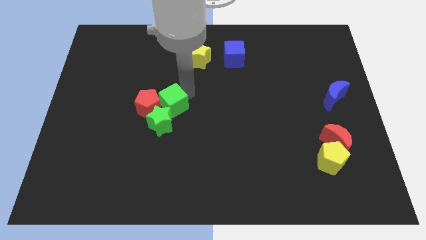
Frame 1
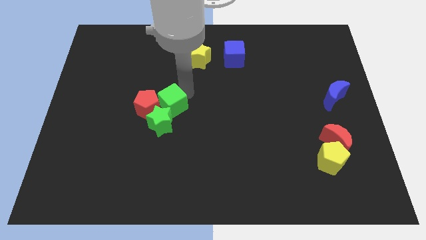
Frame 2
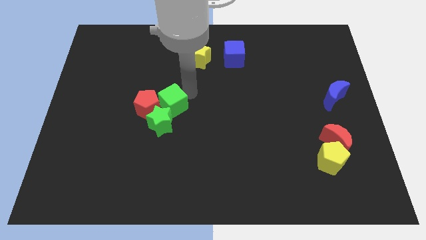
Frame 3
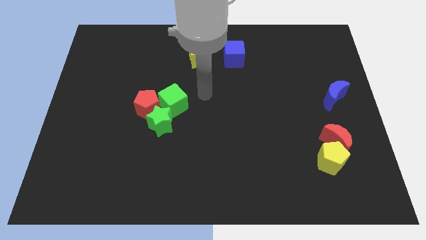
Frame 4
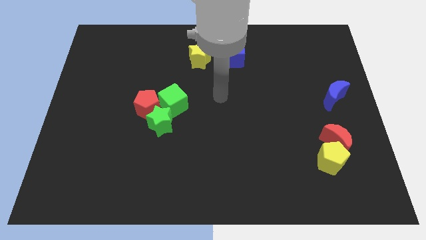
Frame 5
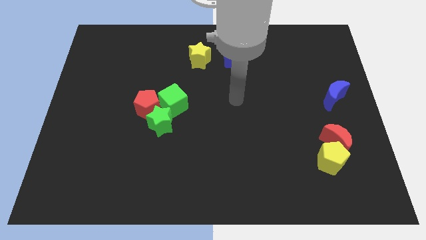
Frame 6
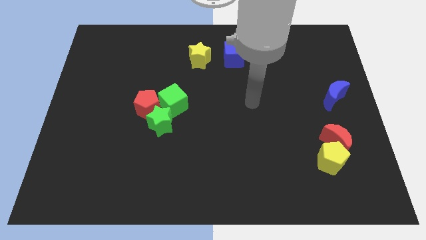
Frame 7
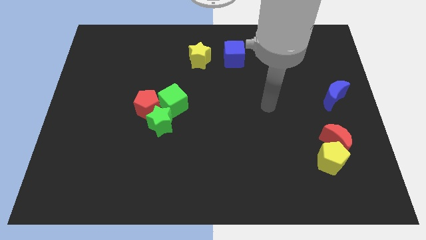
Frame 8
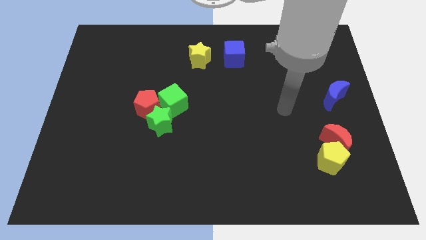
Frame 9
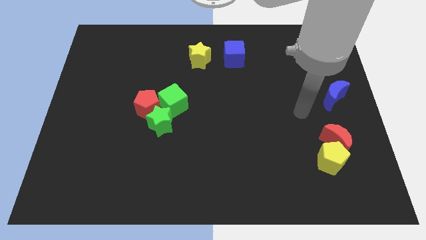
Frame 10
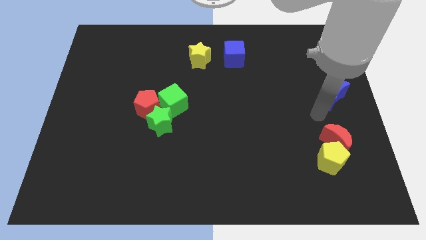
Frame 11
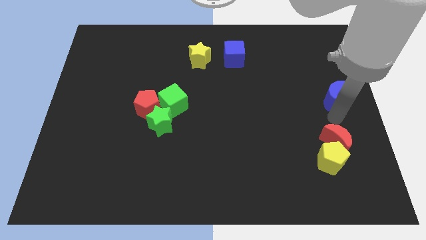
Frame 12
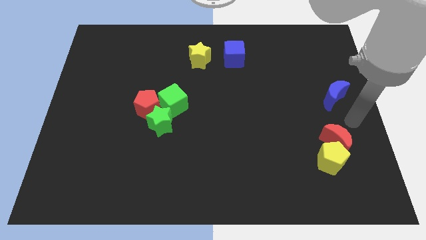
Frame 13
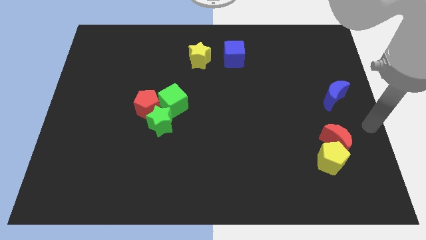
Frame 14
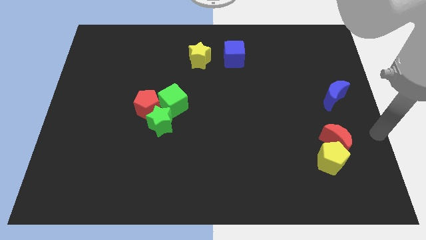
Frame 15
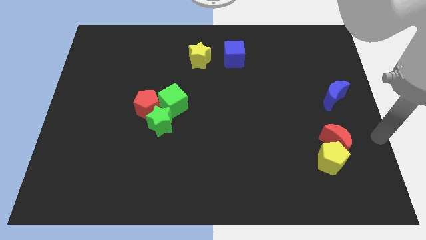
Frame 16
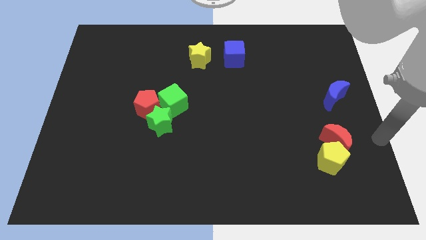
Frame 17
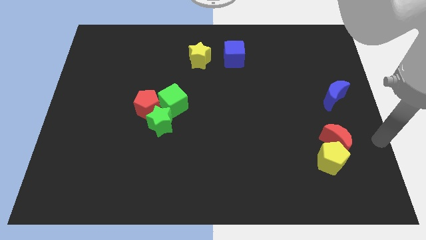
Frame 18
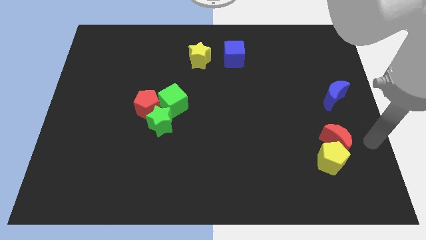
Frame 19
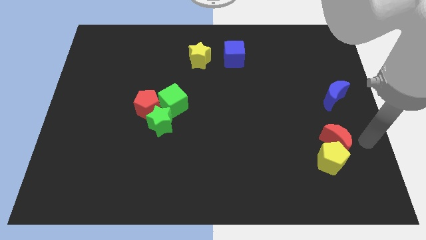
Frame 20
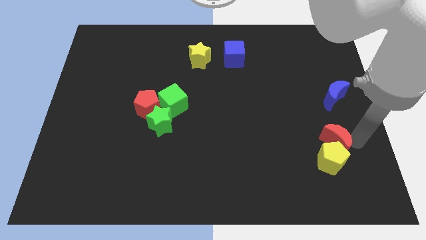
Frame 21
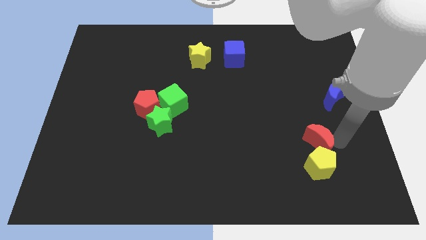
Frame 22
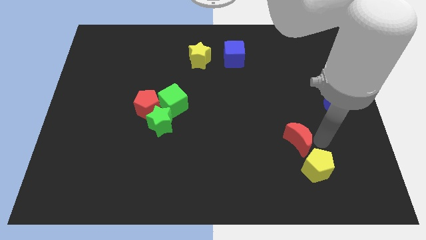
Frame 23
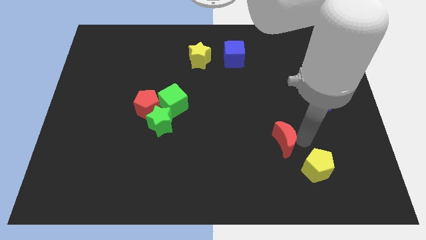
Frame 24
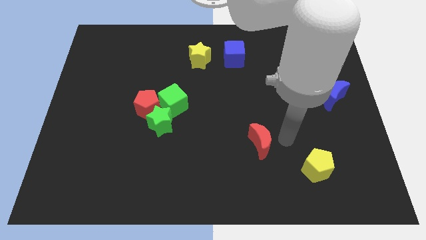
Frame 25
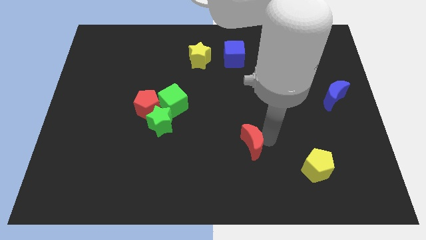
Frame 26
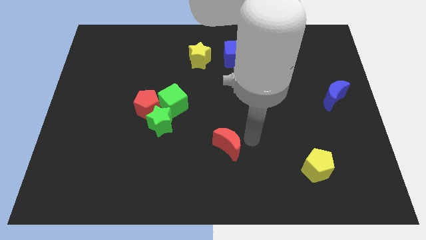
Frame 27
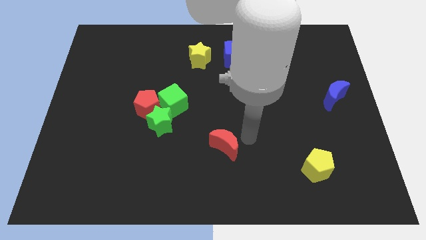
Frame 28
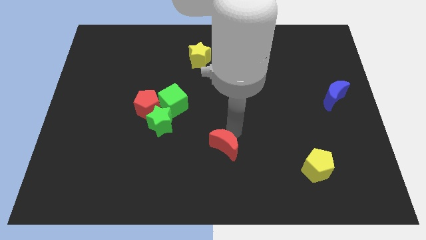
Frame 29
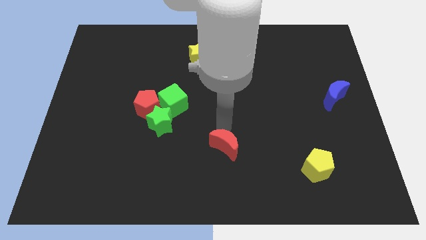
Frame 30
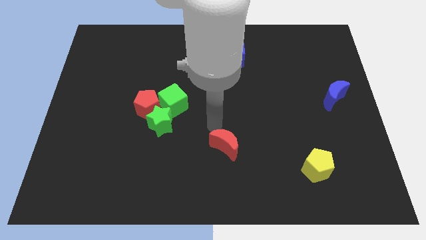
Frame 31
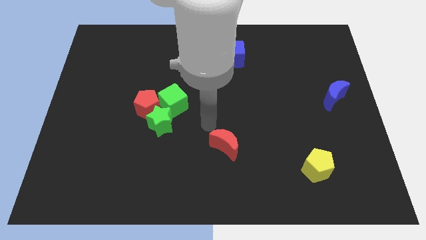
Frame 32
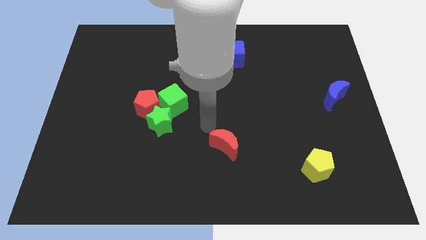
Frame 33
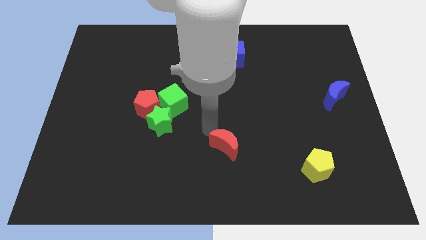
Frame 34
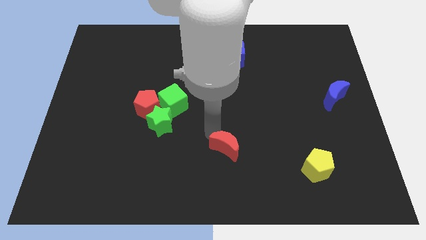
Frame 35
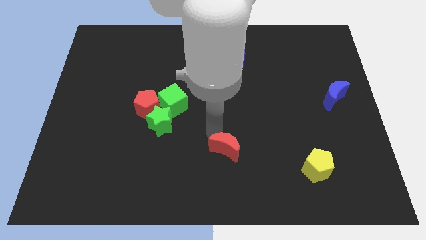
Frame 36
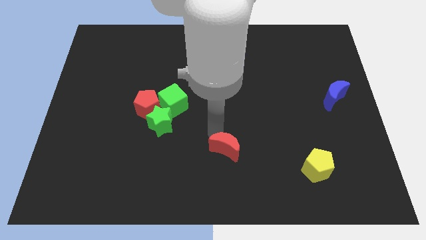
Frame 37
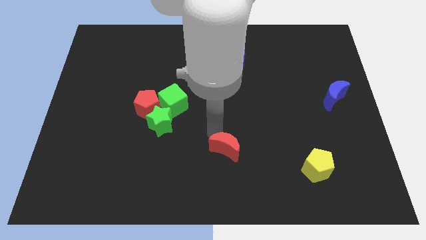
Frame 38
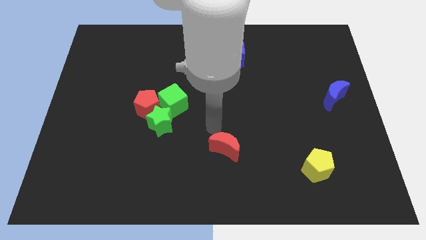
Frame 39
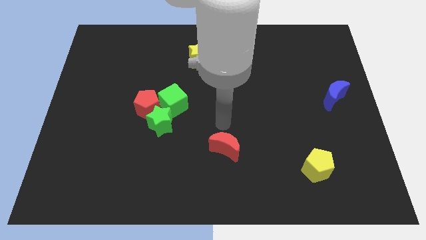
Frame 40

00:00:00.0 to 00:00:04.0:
place the red moon below the blue cube

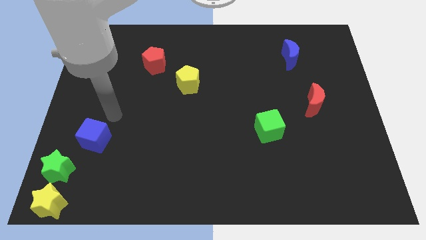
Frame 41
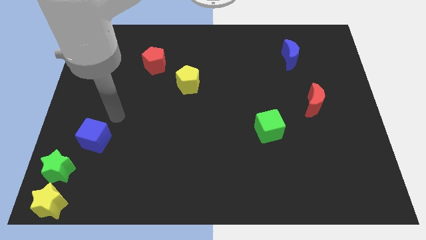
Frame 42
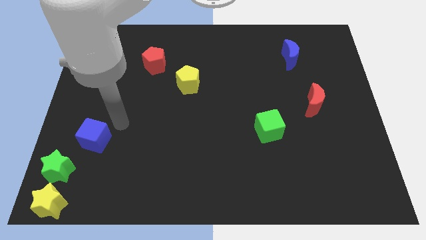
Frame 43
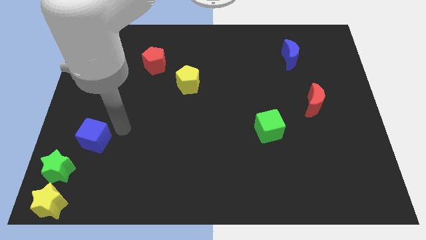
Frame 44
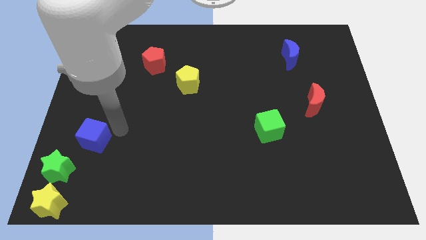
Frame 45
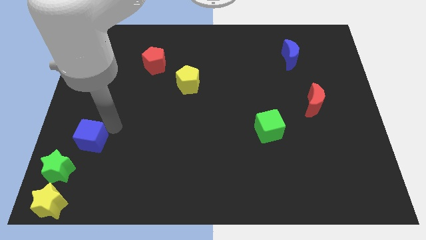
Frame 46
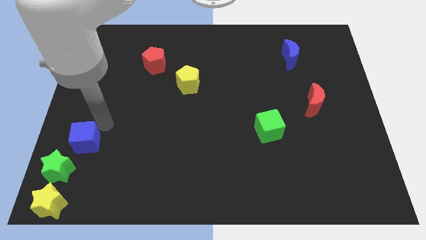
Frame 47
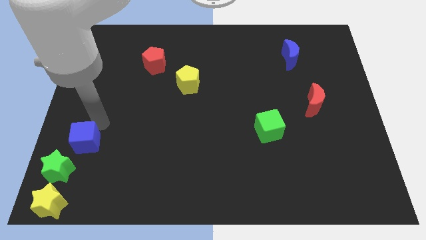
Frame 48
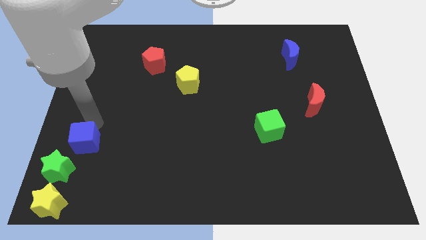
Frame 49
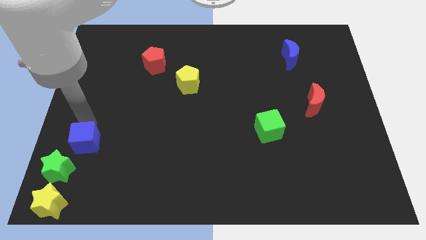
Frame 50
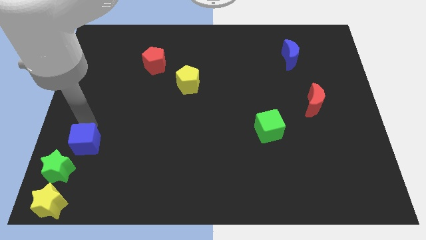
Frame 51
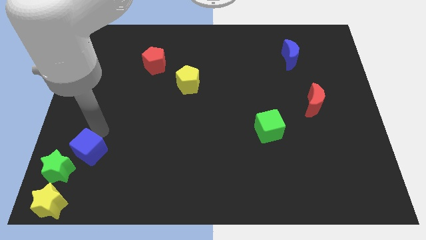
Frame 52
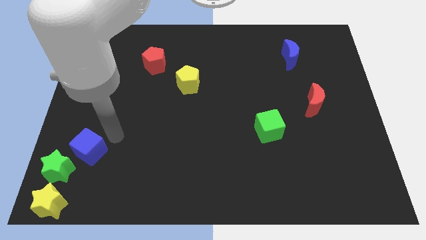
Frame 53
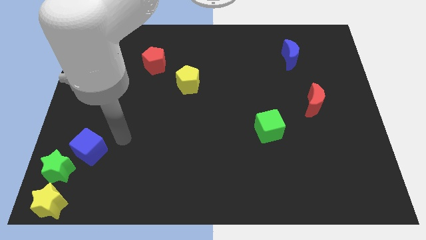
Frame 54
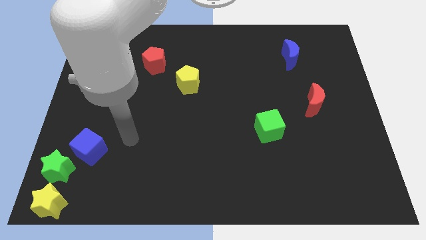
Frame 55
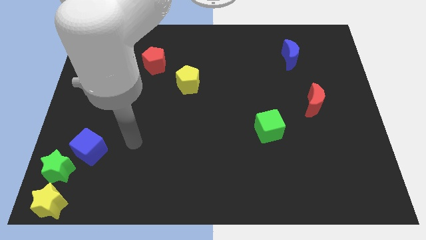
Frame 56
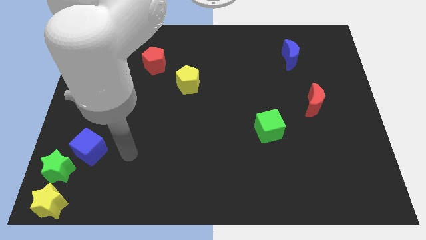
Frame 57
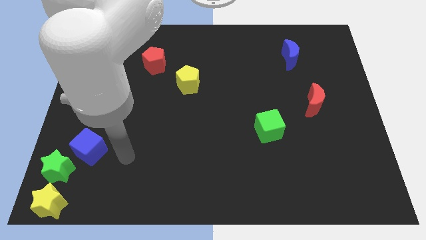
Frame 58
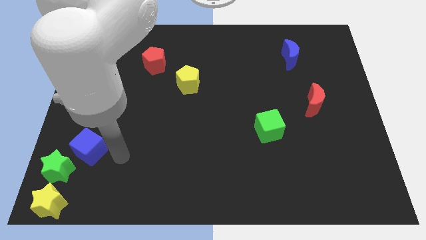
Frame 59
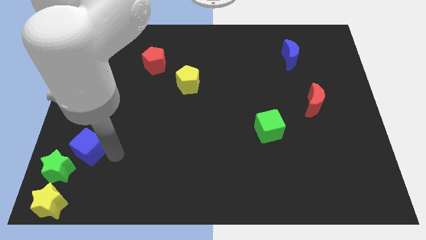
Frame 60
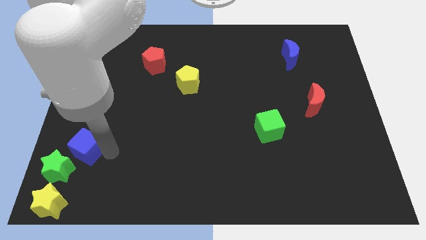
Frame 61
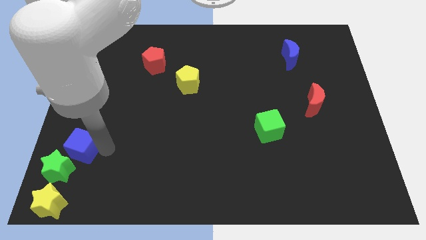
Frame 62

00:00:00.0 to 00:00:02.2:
move blue cube towards green star

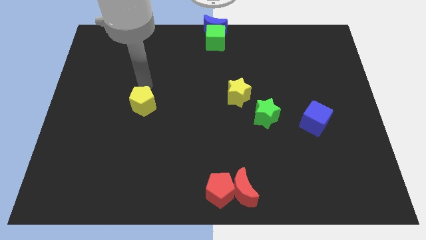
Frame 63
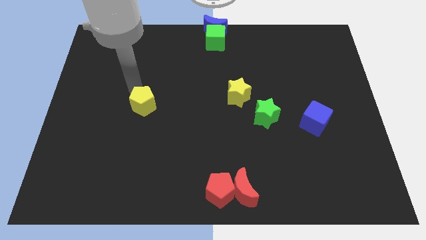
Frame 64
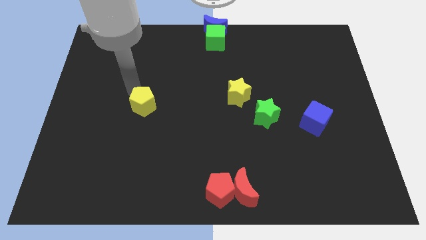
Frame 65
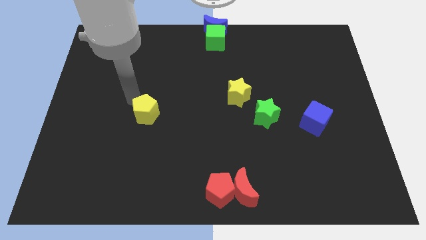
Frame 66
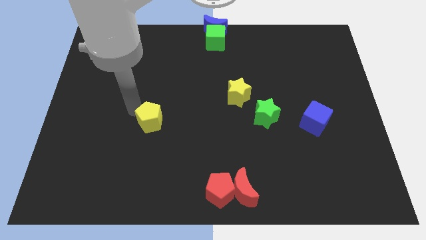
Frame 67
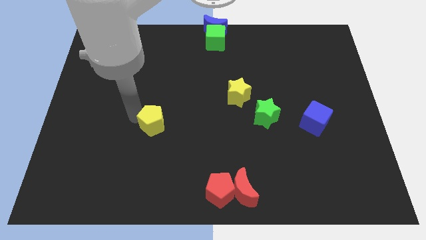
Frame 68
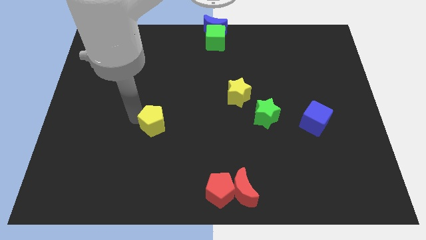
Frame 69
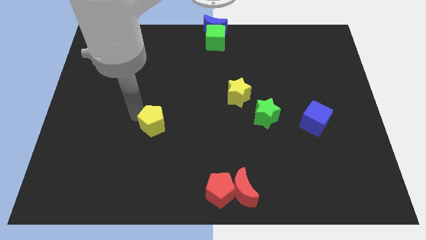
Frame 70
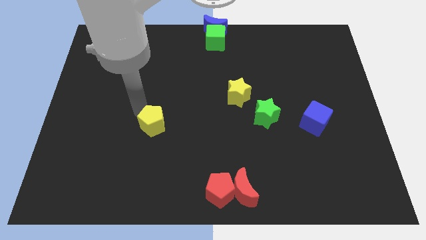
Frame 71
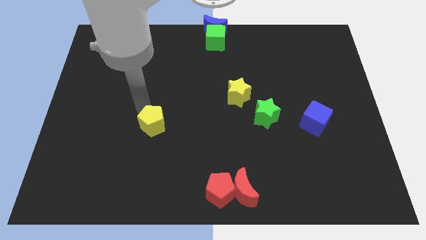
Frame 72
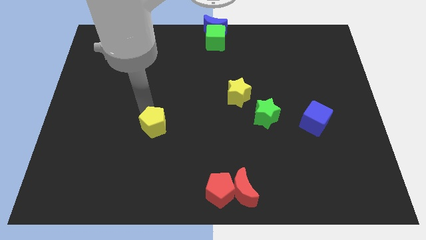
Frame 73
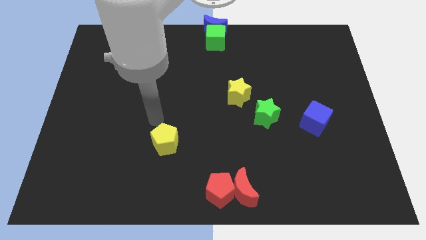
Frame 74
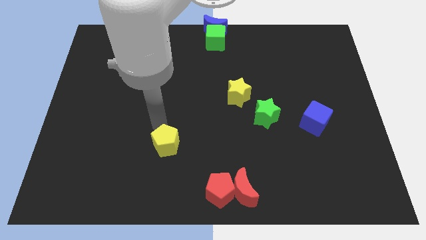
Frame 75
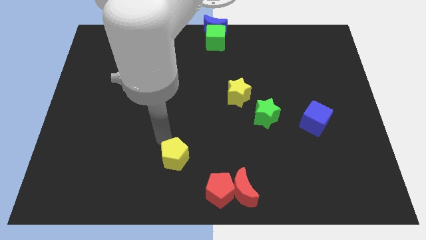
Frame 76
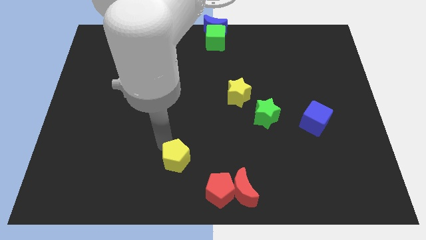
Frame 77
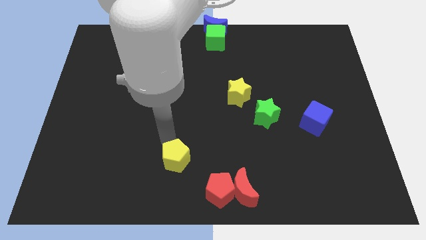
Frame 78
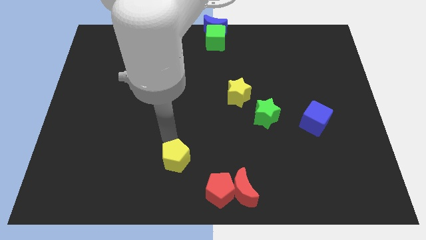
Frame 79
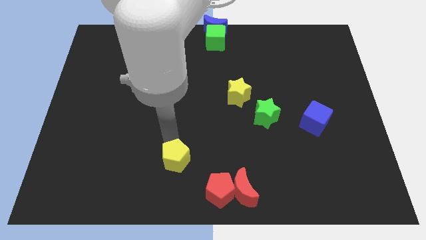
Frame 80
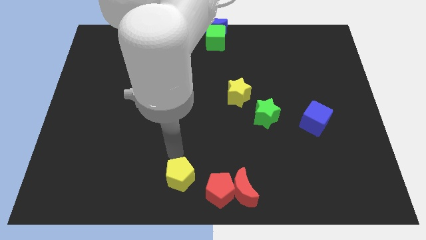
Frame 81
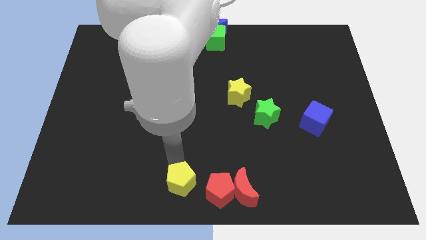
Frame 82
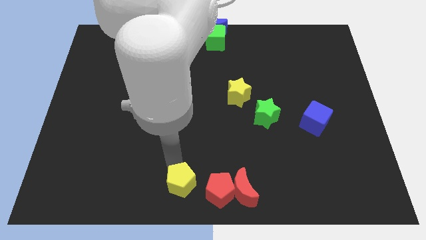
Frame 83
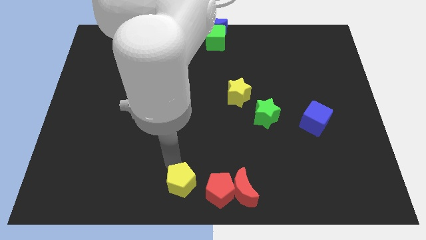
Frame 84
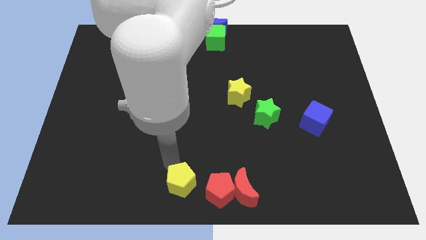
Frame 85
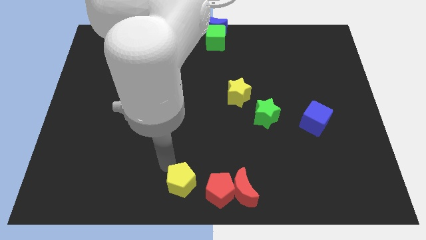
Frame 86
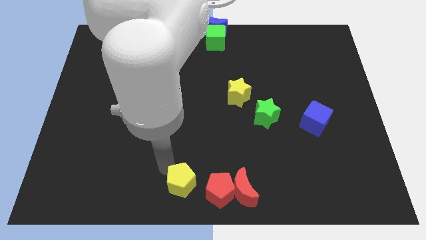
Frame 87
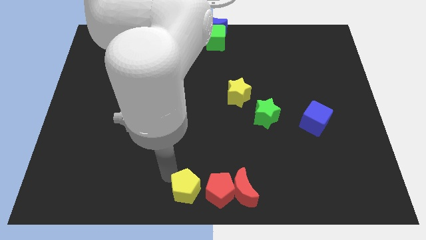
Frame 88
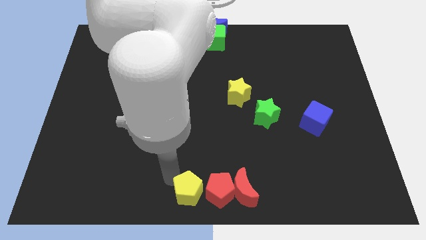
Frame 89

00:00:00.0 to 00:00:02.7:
push the yellow pentagon to the left of the red pentagon

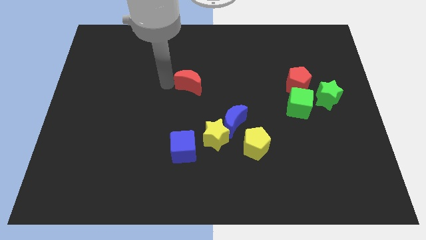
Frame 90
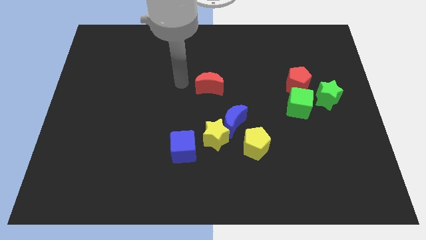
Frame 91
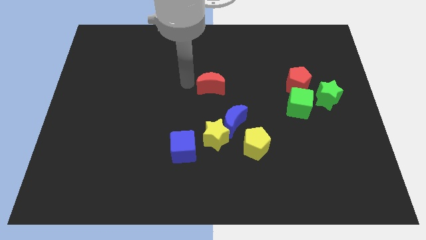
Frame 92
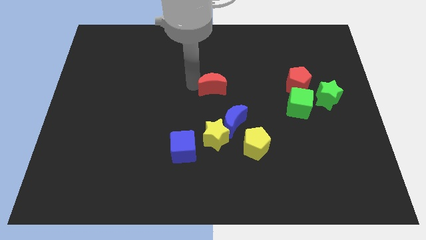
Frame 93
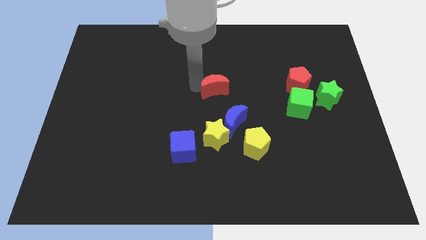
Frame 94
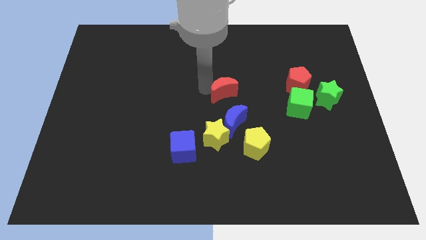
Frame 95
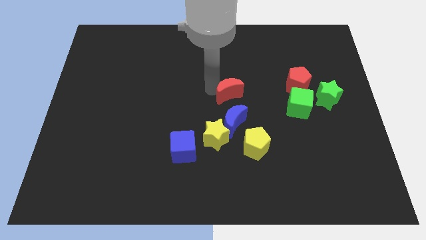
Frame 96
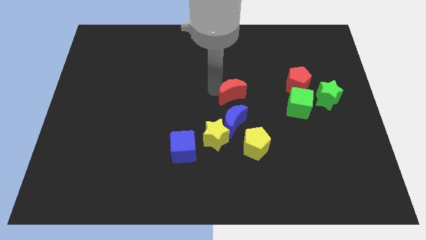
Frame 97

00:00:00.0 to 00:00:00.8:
move the red crescent to the top of blue crescent
